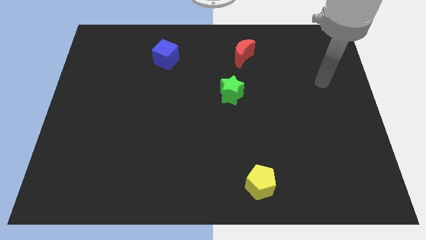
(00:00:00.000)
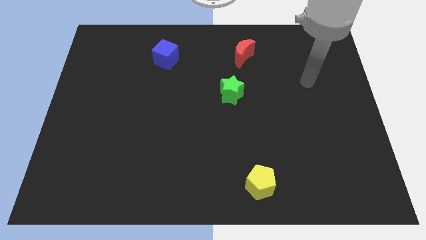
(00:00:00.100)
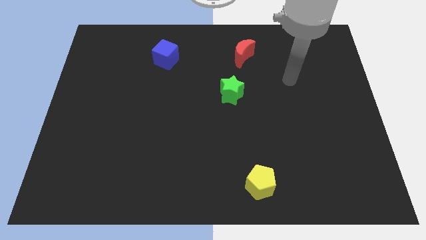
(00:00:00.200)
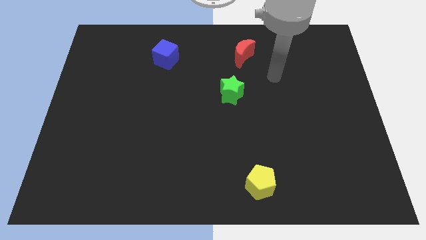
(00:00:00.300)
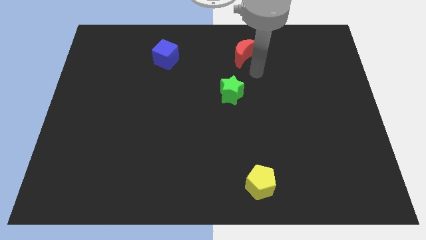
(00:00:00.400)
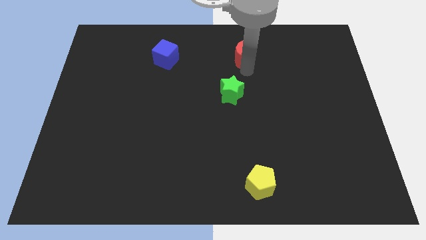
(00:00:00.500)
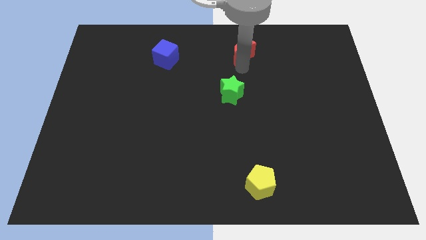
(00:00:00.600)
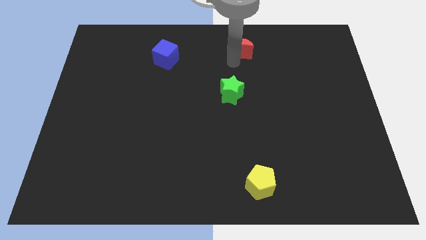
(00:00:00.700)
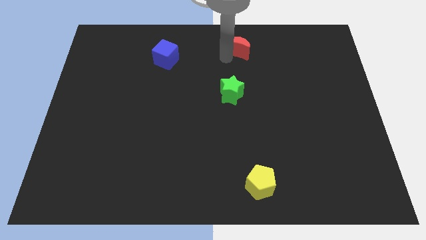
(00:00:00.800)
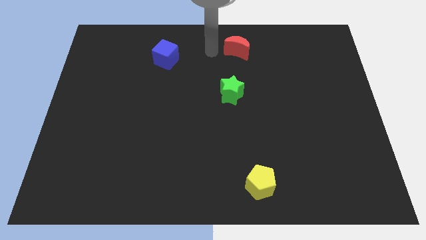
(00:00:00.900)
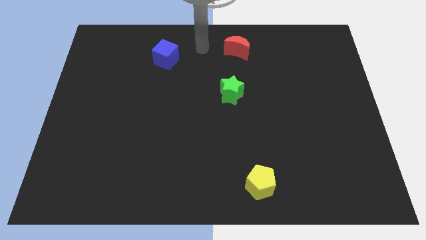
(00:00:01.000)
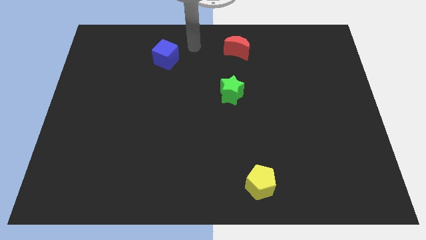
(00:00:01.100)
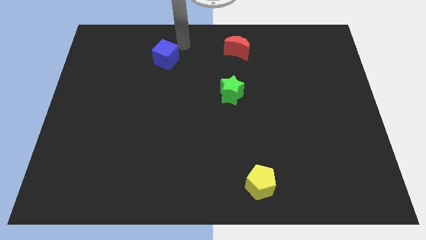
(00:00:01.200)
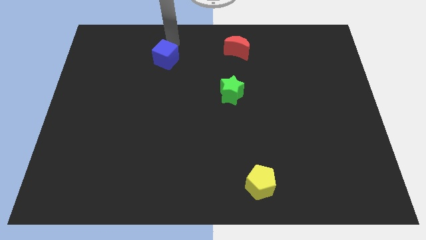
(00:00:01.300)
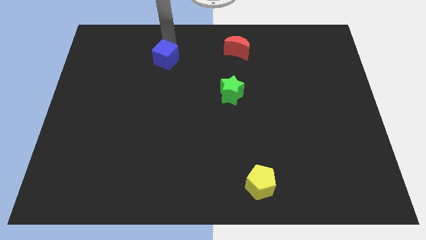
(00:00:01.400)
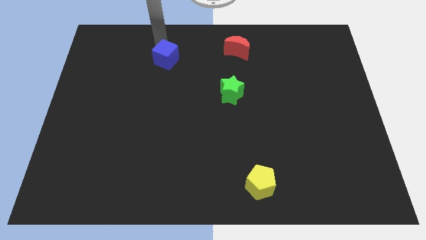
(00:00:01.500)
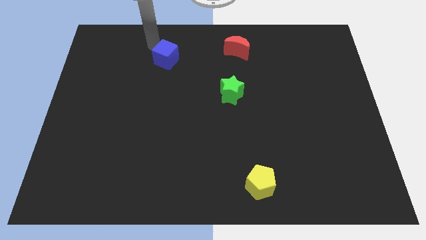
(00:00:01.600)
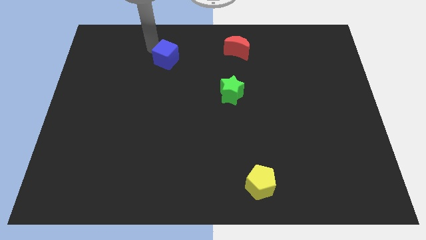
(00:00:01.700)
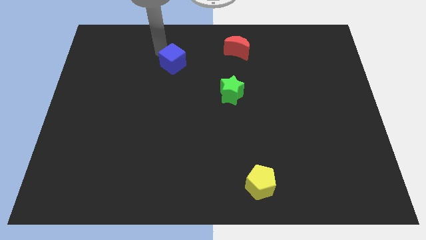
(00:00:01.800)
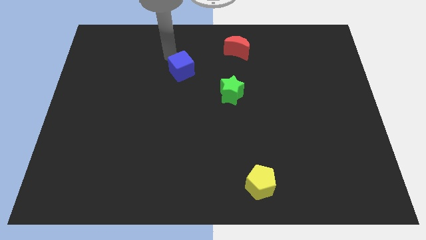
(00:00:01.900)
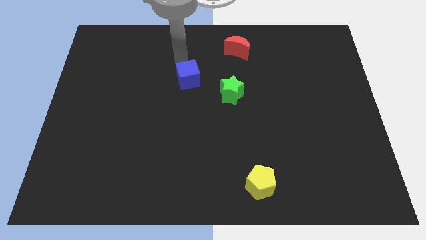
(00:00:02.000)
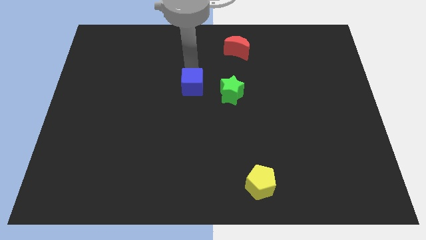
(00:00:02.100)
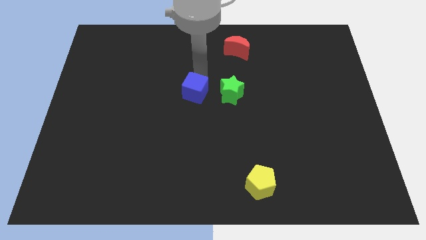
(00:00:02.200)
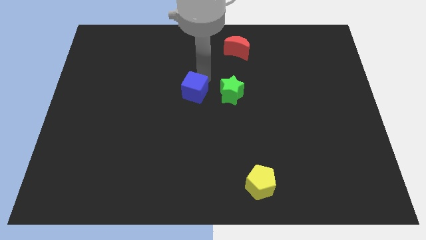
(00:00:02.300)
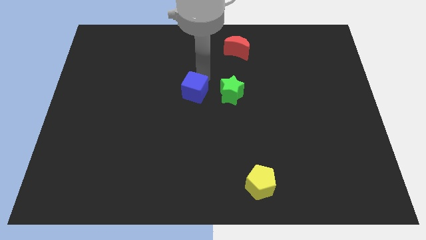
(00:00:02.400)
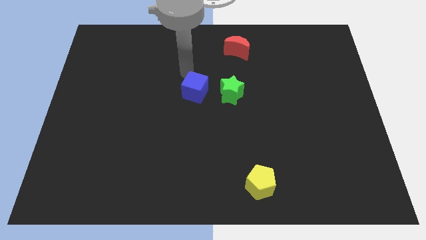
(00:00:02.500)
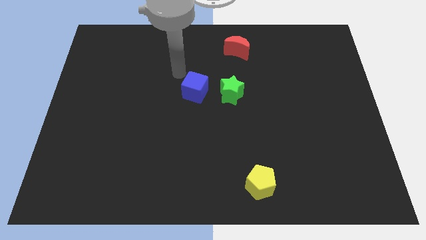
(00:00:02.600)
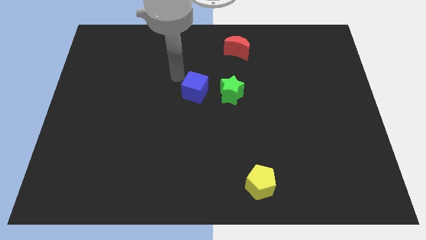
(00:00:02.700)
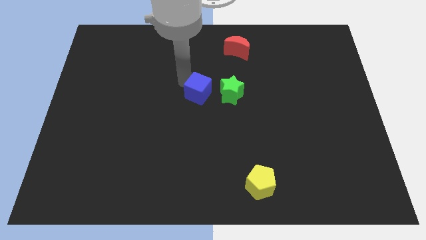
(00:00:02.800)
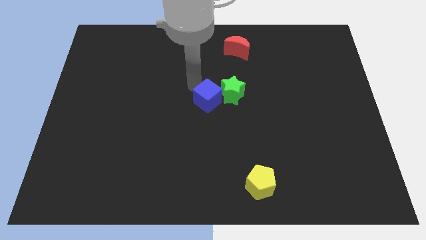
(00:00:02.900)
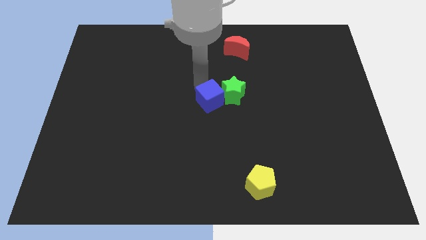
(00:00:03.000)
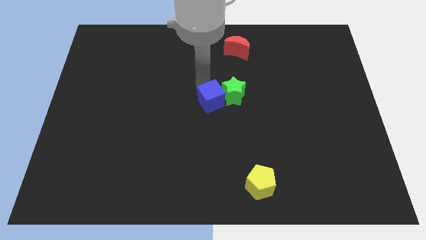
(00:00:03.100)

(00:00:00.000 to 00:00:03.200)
move the blue block to the green star

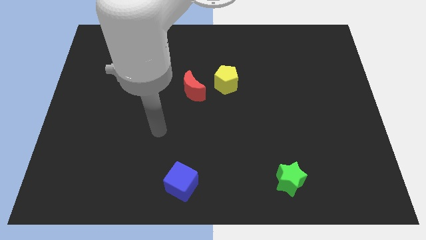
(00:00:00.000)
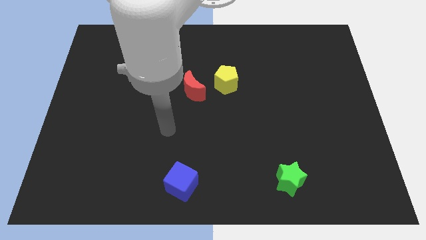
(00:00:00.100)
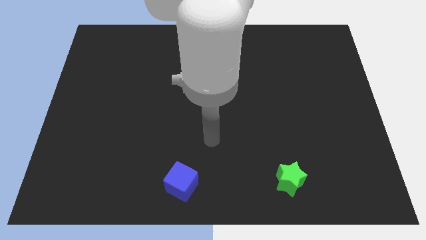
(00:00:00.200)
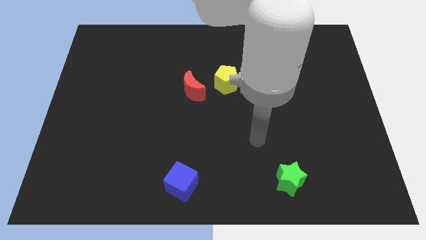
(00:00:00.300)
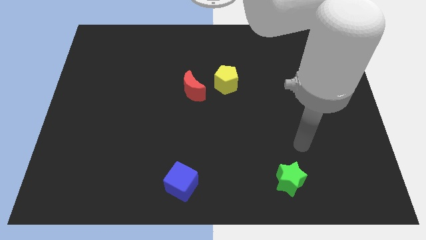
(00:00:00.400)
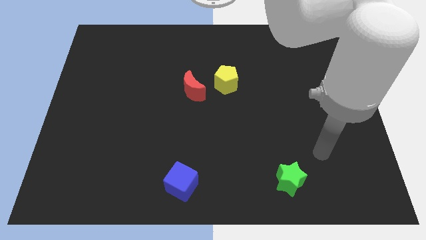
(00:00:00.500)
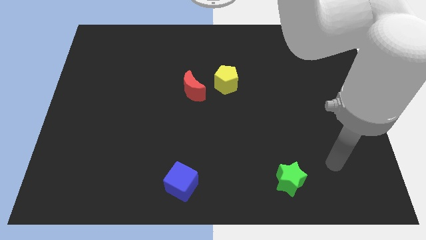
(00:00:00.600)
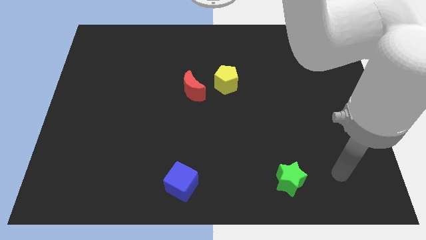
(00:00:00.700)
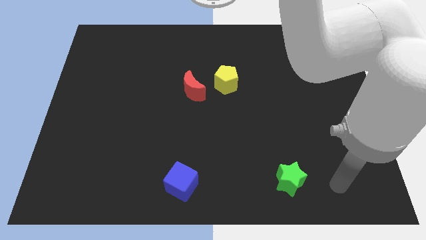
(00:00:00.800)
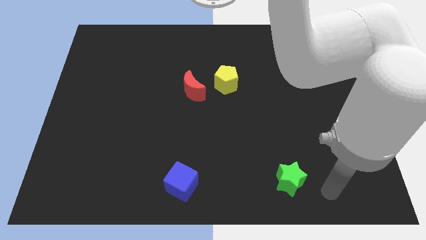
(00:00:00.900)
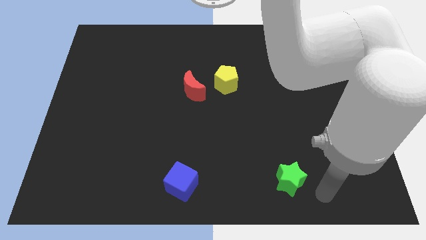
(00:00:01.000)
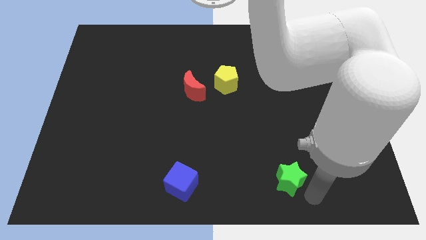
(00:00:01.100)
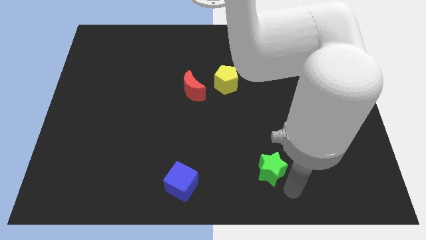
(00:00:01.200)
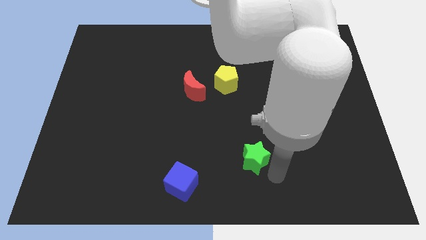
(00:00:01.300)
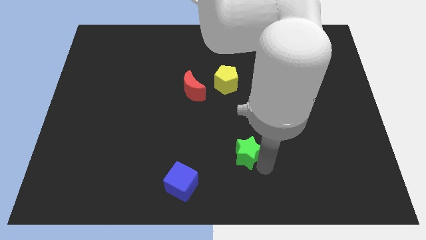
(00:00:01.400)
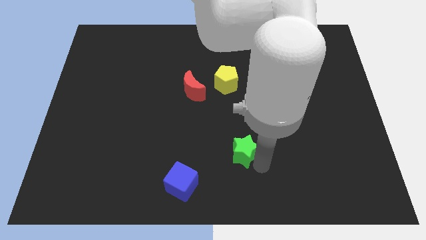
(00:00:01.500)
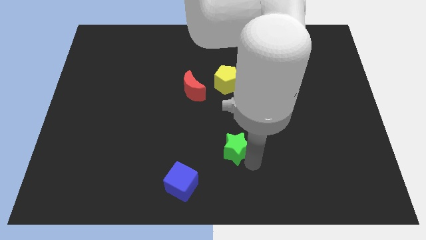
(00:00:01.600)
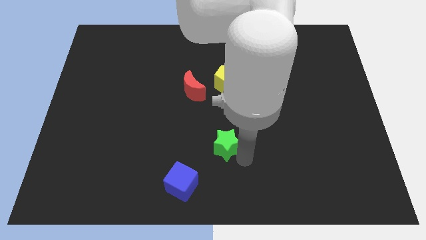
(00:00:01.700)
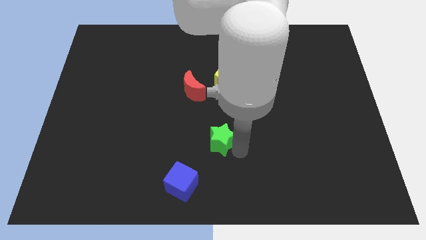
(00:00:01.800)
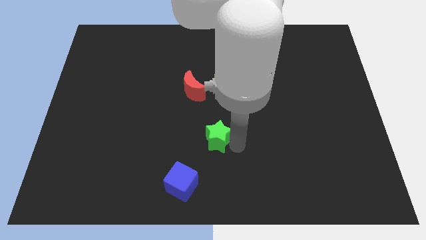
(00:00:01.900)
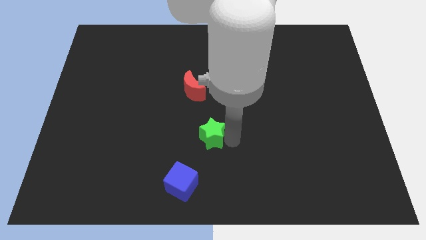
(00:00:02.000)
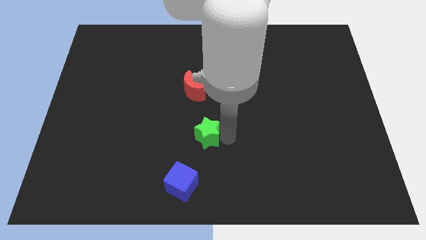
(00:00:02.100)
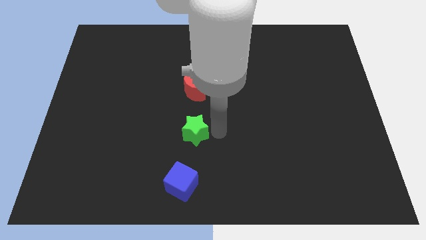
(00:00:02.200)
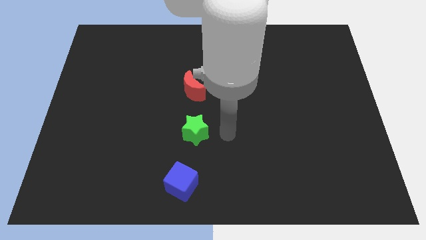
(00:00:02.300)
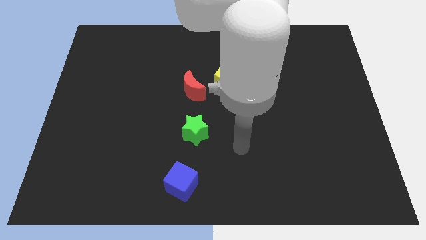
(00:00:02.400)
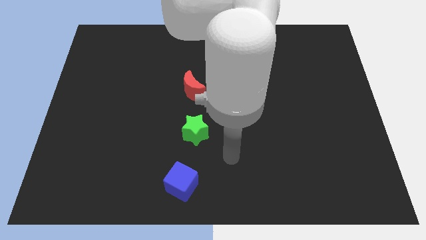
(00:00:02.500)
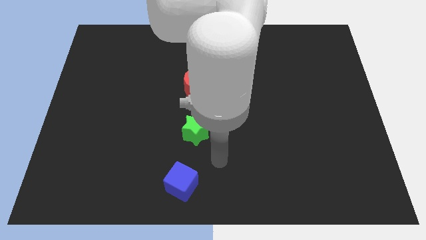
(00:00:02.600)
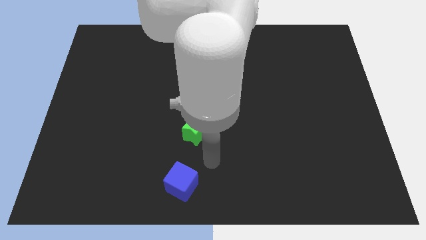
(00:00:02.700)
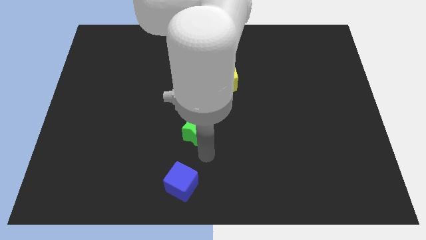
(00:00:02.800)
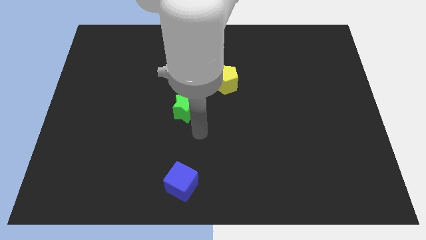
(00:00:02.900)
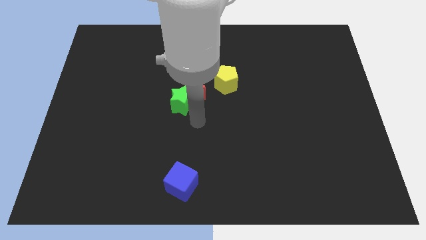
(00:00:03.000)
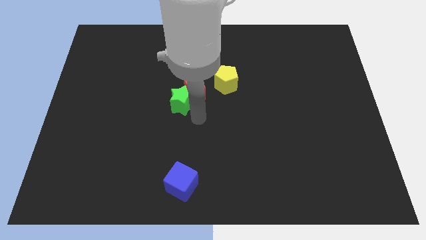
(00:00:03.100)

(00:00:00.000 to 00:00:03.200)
move the green block next to the moon

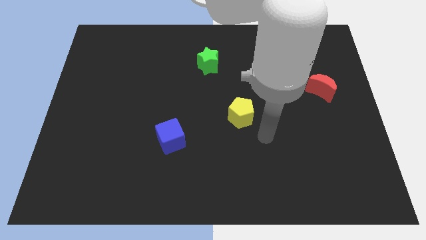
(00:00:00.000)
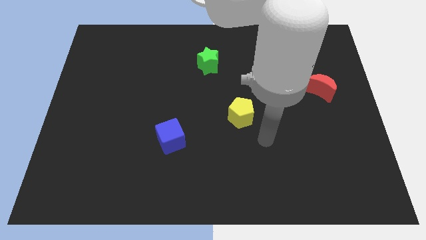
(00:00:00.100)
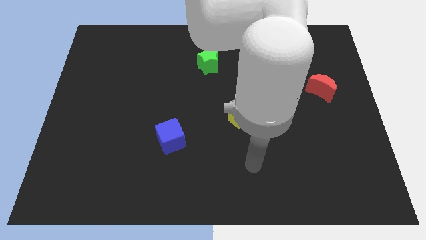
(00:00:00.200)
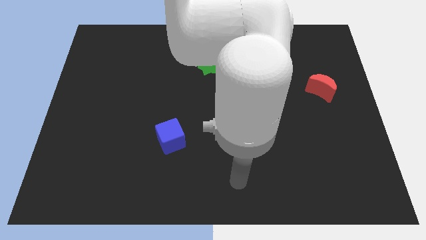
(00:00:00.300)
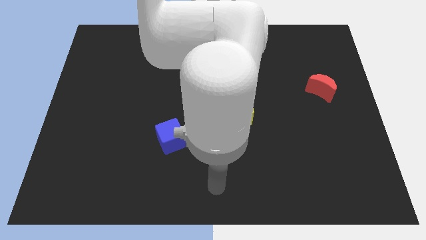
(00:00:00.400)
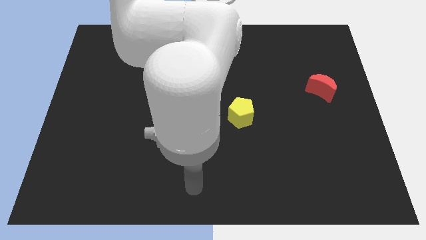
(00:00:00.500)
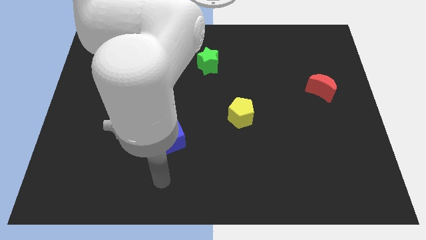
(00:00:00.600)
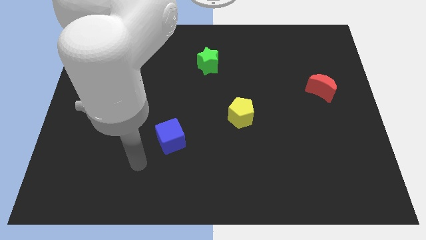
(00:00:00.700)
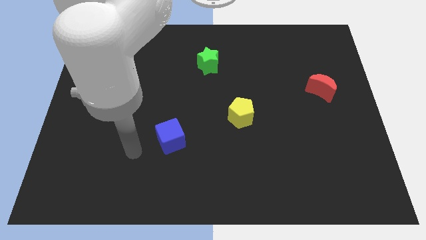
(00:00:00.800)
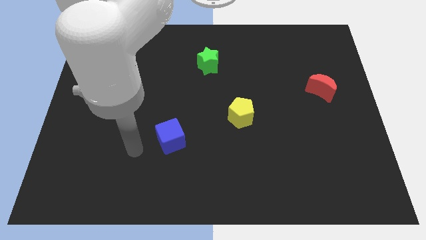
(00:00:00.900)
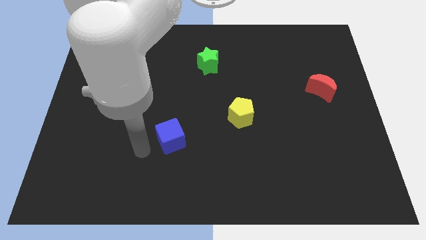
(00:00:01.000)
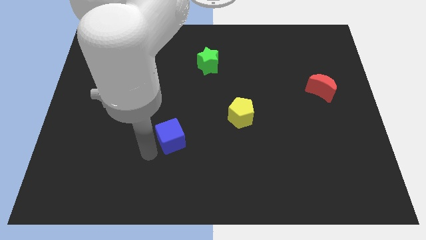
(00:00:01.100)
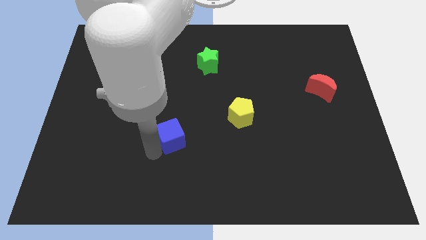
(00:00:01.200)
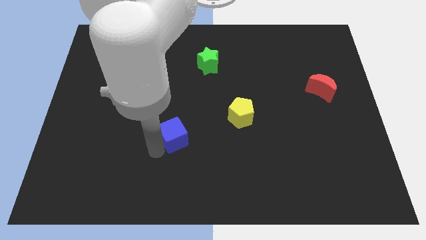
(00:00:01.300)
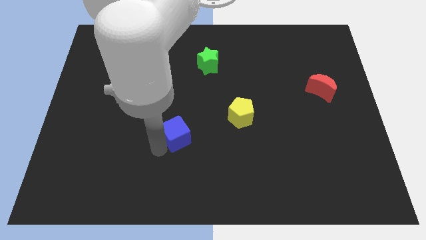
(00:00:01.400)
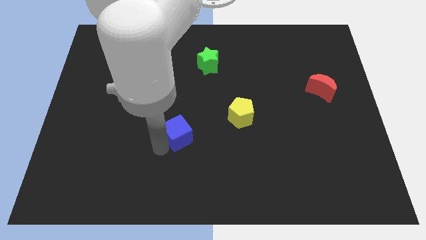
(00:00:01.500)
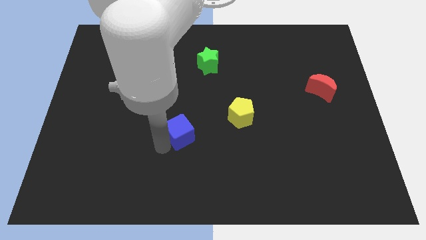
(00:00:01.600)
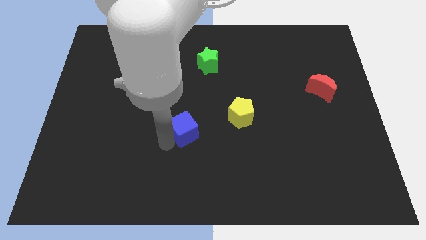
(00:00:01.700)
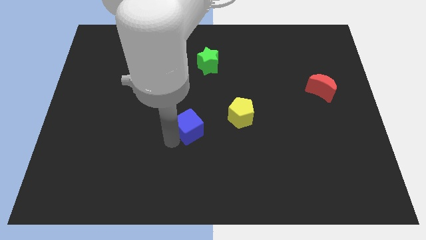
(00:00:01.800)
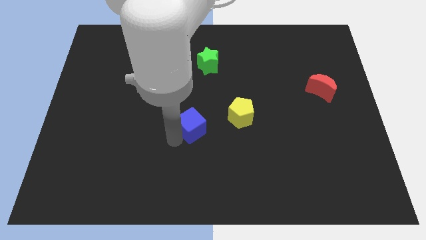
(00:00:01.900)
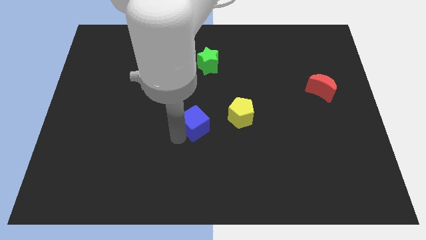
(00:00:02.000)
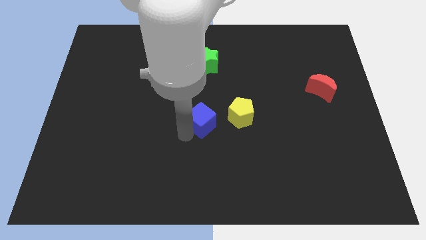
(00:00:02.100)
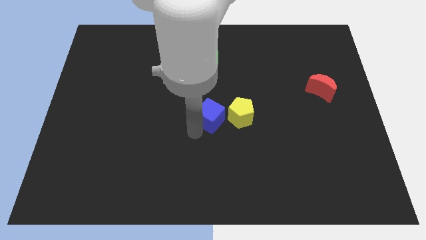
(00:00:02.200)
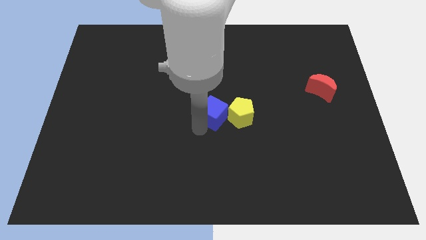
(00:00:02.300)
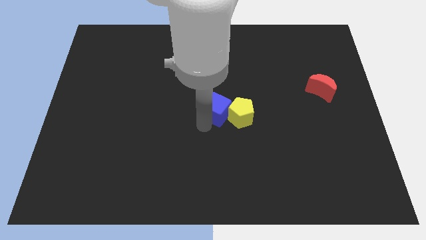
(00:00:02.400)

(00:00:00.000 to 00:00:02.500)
put the blue cube next to the yellow pentagon
